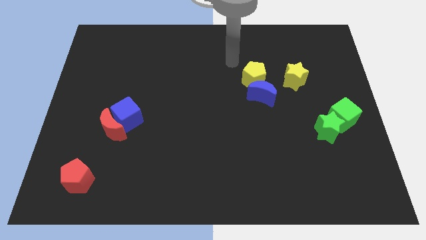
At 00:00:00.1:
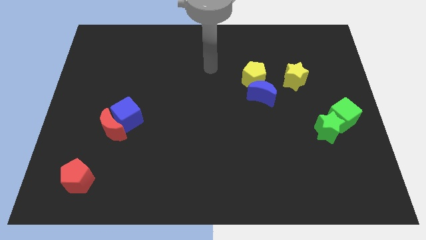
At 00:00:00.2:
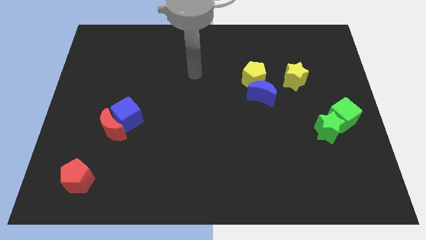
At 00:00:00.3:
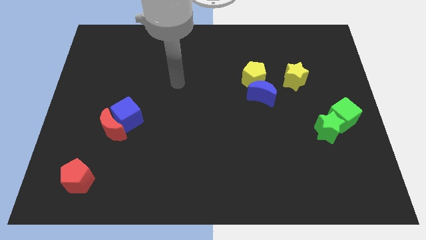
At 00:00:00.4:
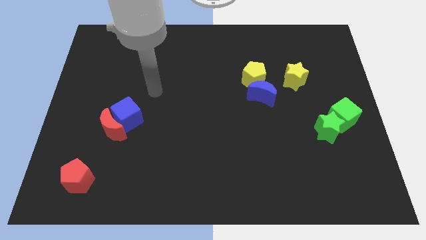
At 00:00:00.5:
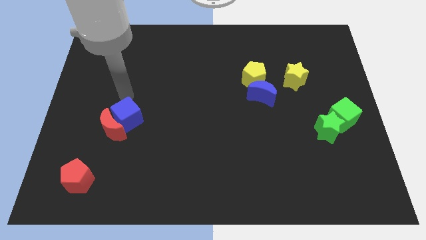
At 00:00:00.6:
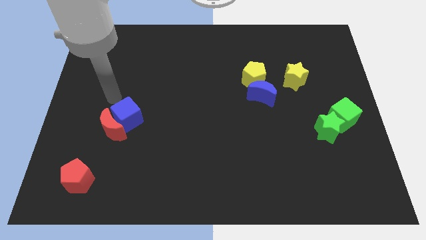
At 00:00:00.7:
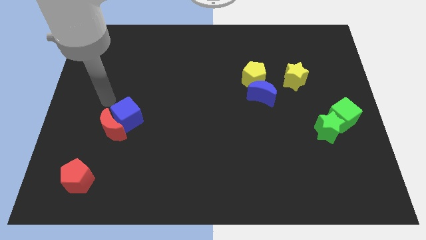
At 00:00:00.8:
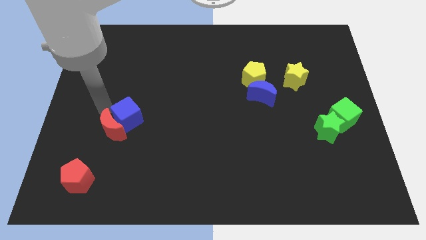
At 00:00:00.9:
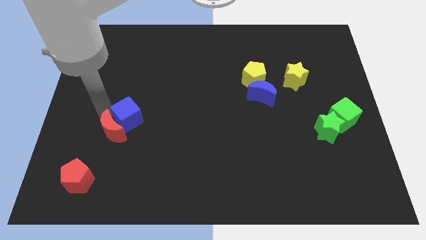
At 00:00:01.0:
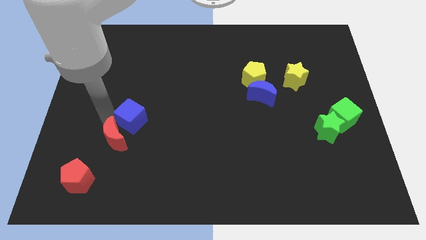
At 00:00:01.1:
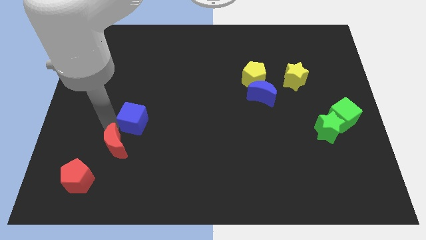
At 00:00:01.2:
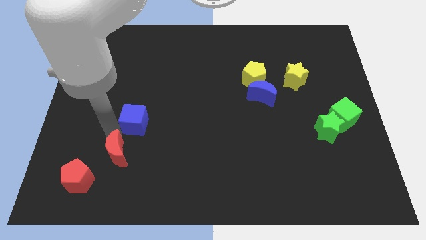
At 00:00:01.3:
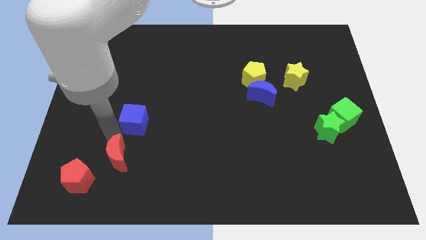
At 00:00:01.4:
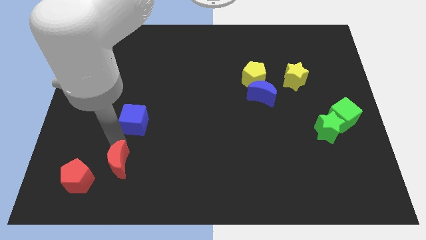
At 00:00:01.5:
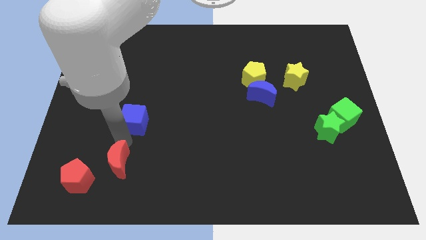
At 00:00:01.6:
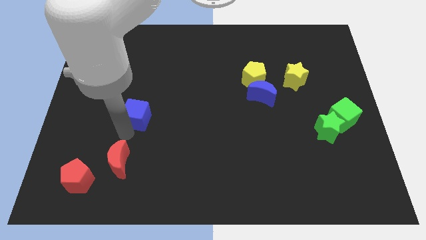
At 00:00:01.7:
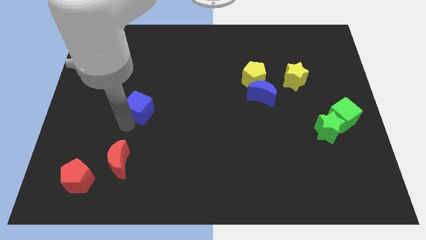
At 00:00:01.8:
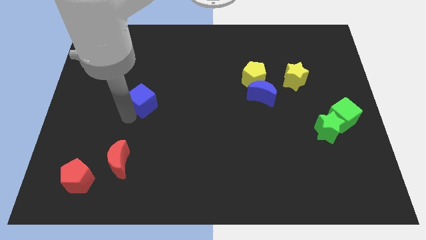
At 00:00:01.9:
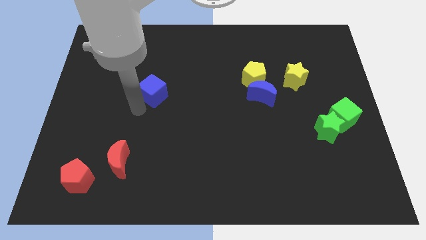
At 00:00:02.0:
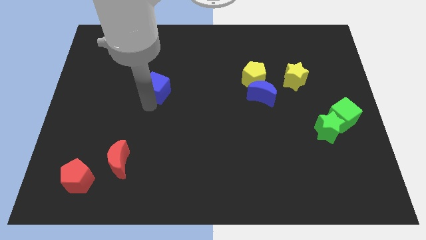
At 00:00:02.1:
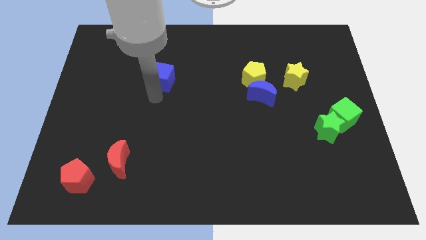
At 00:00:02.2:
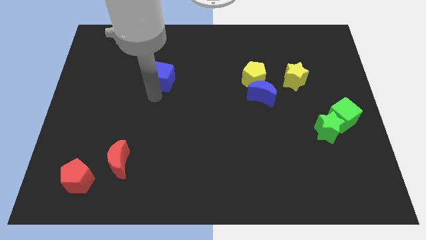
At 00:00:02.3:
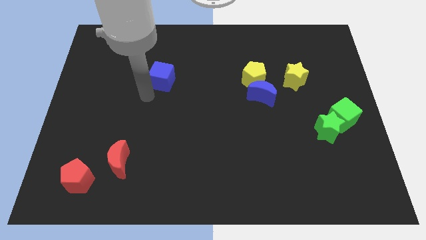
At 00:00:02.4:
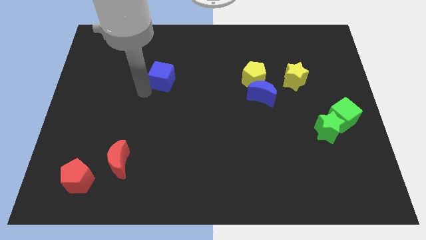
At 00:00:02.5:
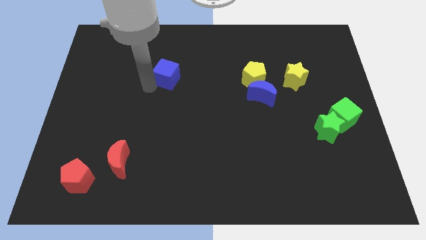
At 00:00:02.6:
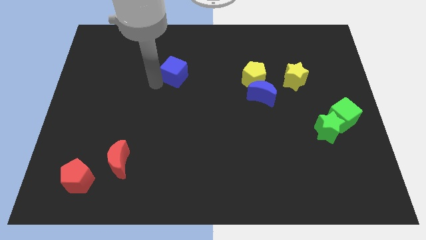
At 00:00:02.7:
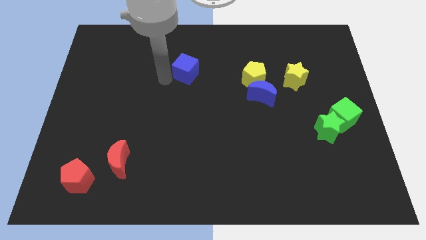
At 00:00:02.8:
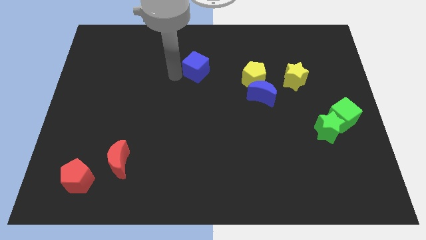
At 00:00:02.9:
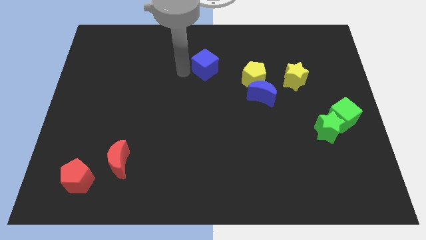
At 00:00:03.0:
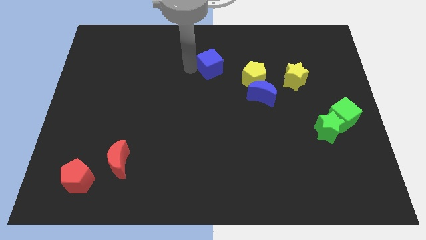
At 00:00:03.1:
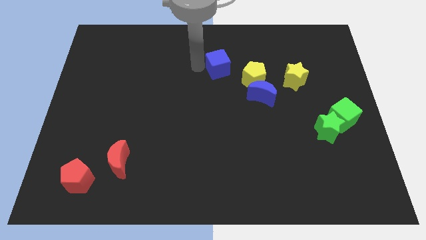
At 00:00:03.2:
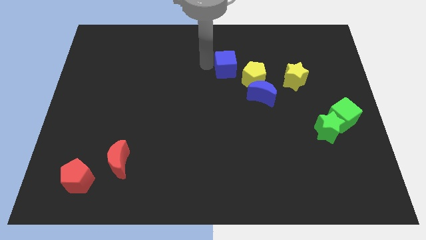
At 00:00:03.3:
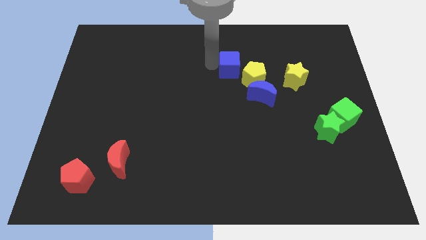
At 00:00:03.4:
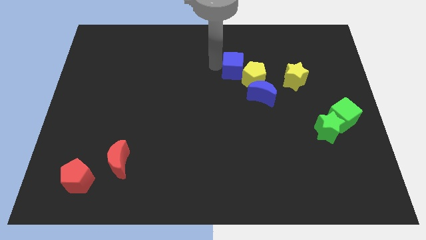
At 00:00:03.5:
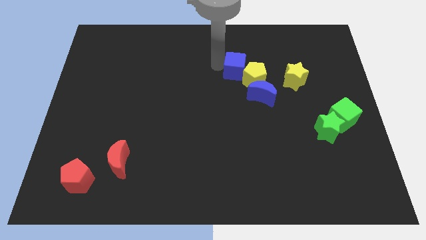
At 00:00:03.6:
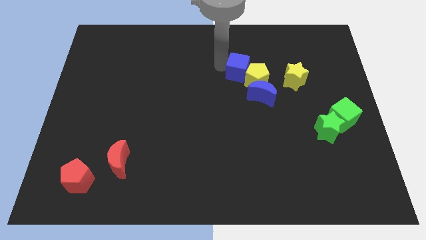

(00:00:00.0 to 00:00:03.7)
slide the blue cube close to the yellow pentagon

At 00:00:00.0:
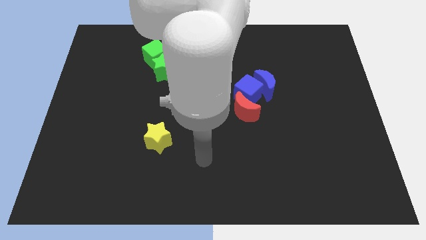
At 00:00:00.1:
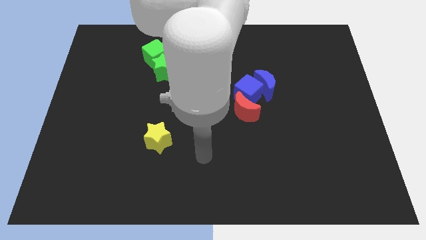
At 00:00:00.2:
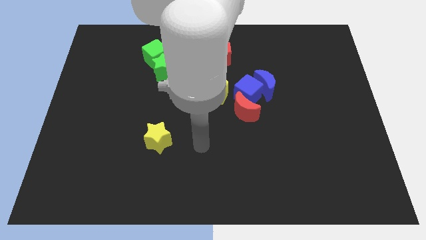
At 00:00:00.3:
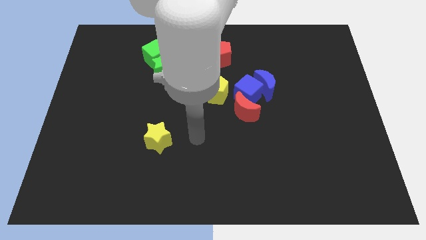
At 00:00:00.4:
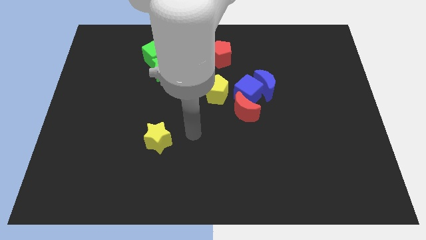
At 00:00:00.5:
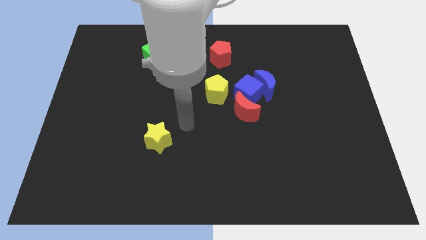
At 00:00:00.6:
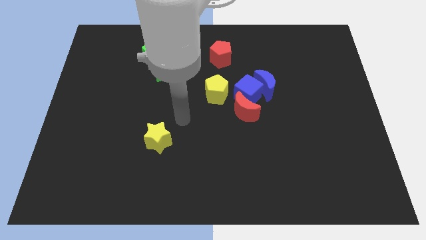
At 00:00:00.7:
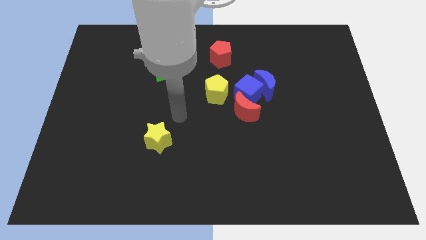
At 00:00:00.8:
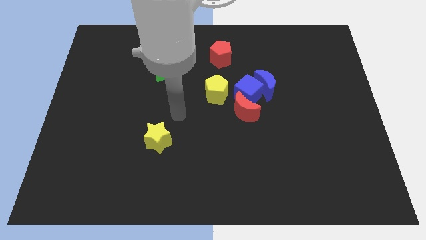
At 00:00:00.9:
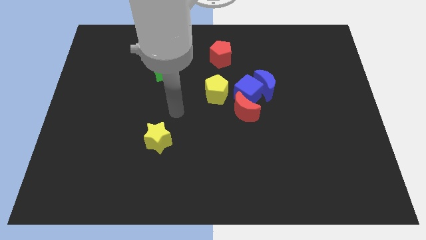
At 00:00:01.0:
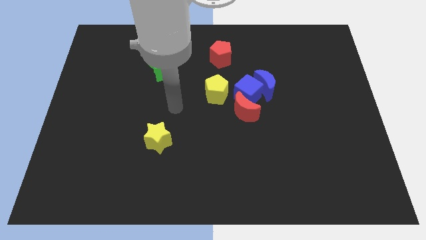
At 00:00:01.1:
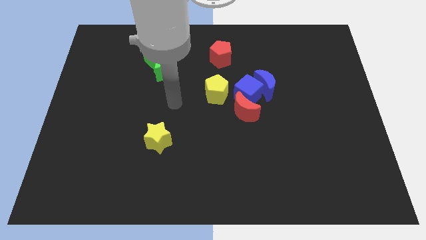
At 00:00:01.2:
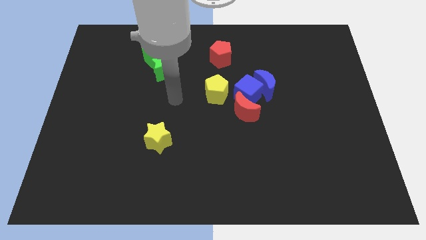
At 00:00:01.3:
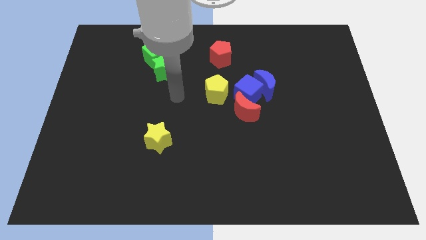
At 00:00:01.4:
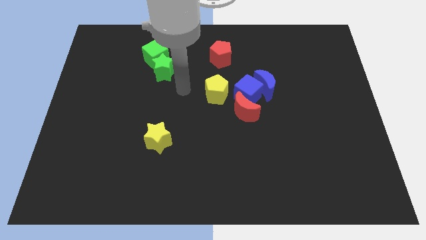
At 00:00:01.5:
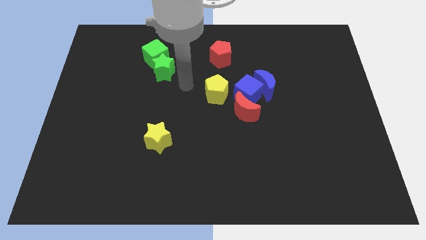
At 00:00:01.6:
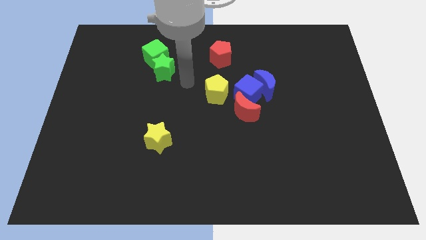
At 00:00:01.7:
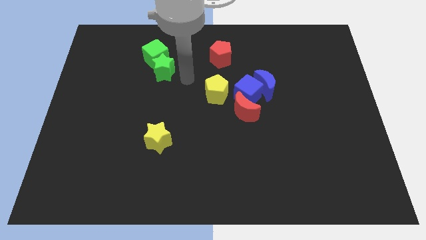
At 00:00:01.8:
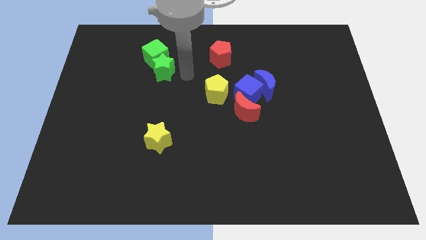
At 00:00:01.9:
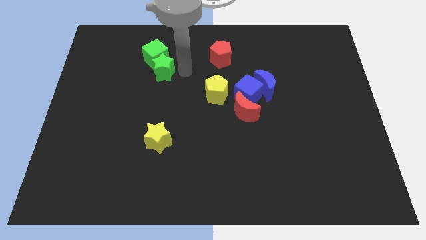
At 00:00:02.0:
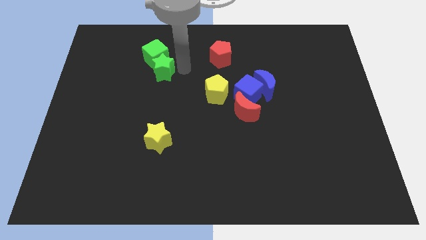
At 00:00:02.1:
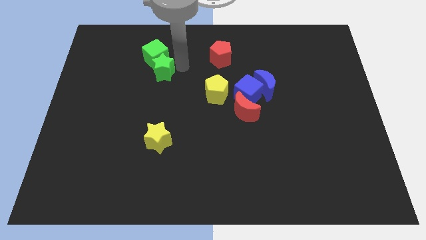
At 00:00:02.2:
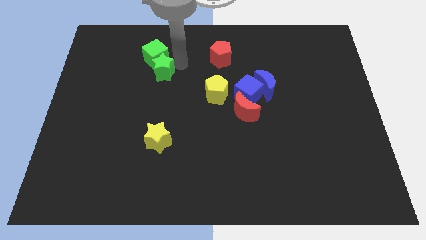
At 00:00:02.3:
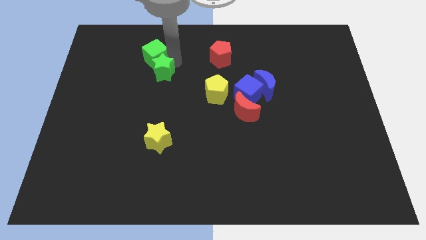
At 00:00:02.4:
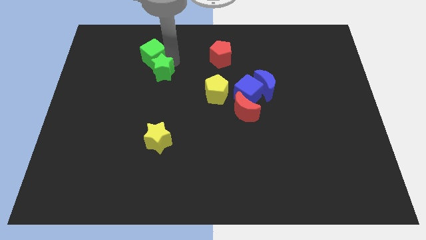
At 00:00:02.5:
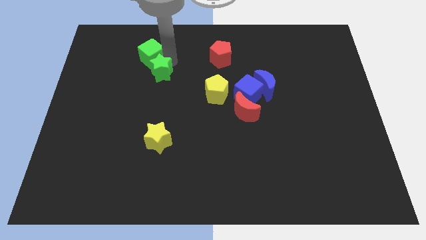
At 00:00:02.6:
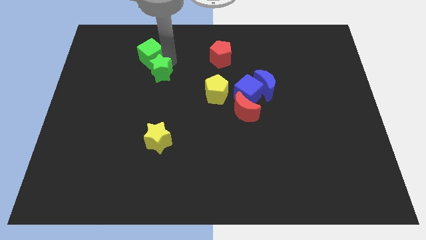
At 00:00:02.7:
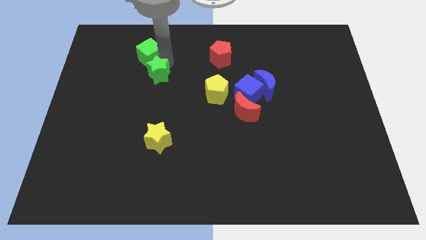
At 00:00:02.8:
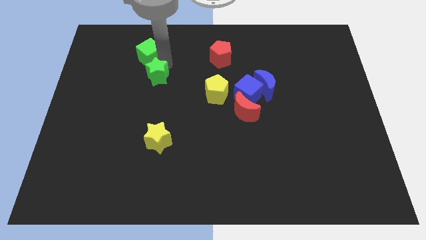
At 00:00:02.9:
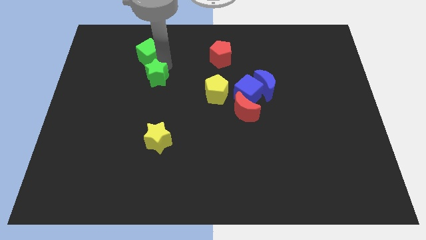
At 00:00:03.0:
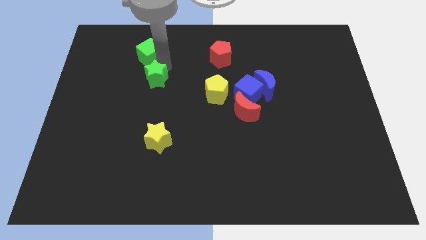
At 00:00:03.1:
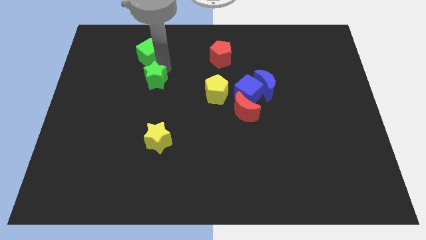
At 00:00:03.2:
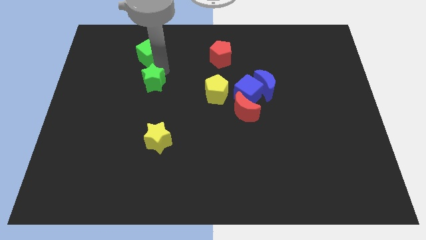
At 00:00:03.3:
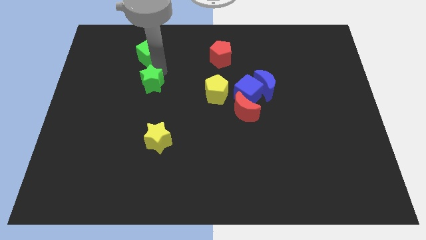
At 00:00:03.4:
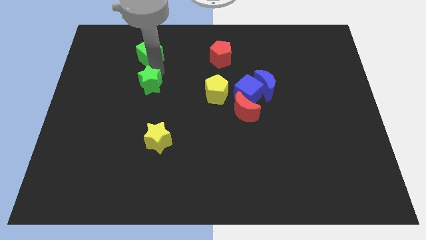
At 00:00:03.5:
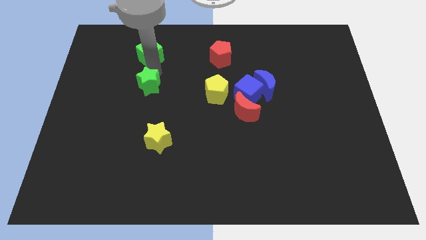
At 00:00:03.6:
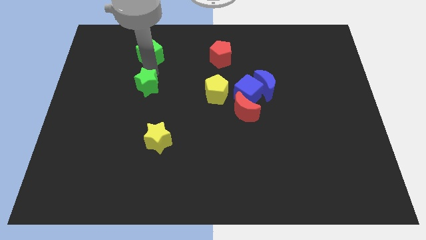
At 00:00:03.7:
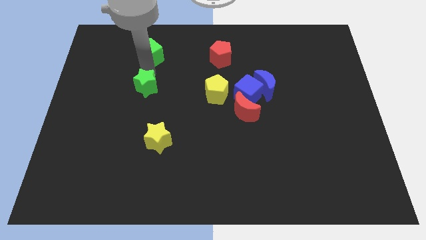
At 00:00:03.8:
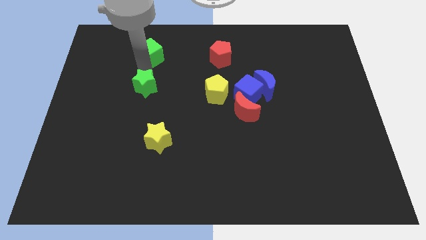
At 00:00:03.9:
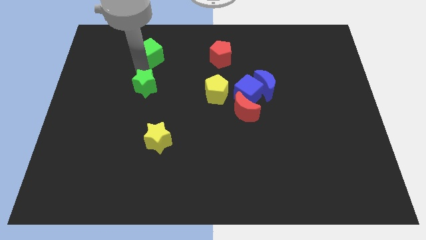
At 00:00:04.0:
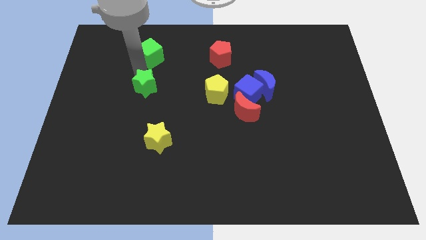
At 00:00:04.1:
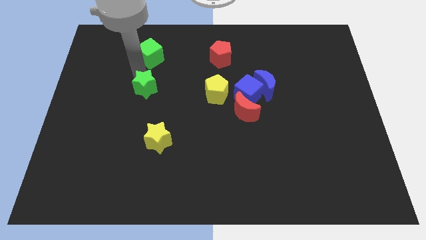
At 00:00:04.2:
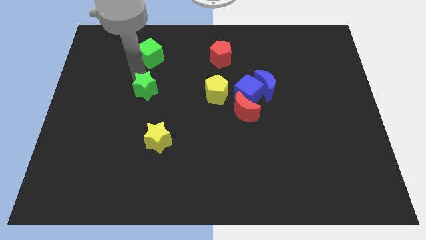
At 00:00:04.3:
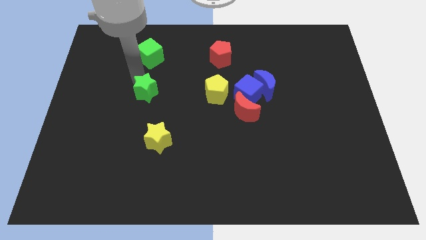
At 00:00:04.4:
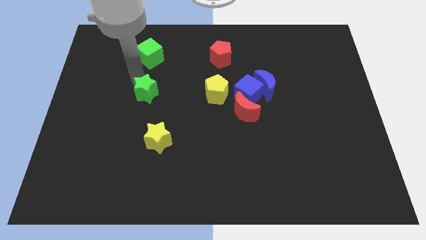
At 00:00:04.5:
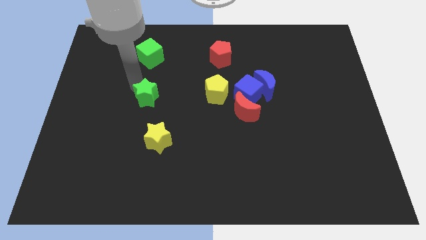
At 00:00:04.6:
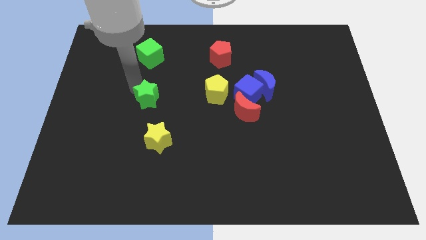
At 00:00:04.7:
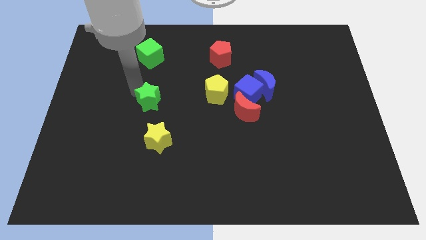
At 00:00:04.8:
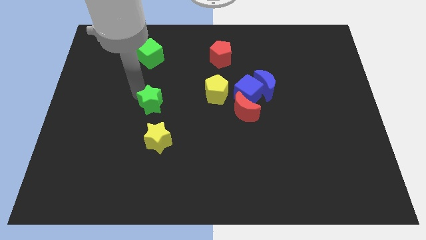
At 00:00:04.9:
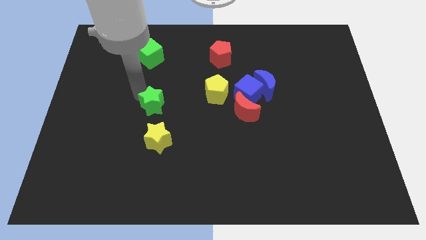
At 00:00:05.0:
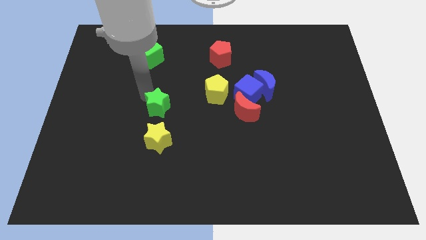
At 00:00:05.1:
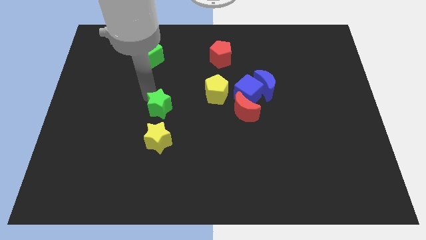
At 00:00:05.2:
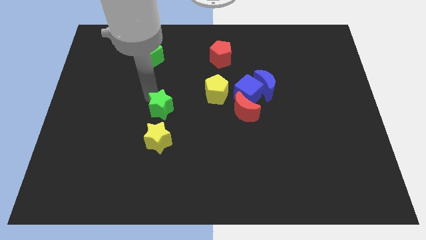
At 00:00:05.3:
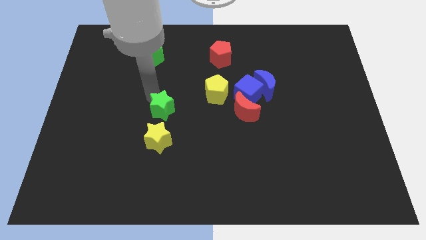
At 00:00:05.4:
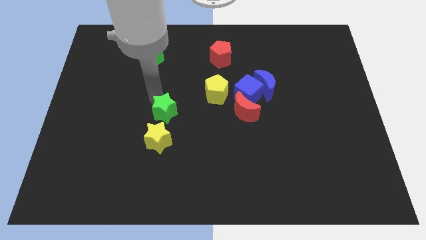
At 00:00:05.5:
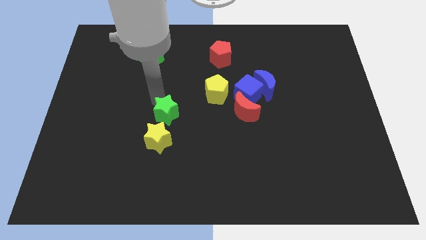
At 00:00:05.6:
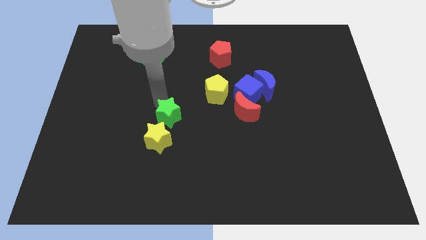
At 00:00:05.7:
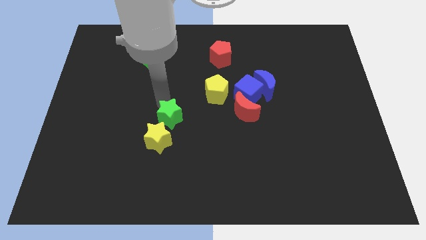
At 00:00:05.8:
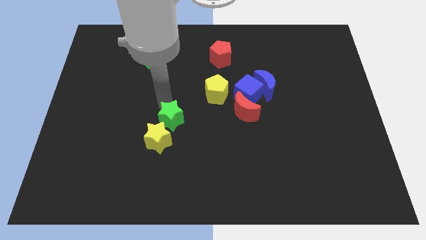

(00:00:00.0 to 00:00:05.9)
slide the green star towards the yellow star
